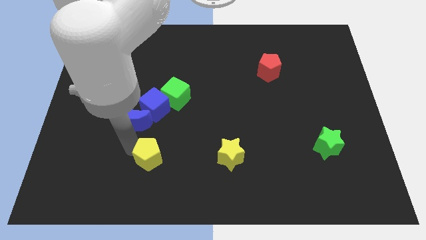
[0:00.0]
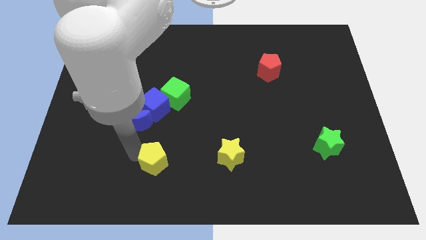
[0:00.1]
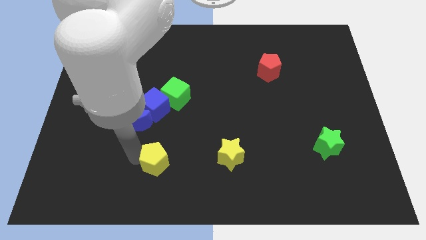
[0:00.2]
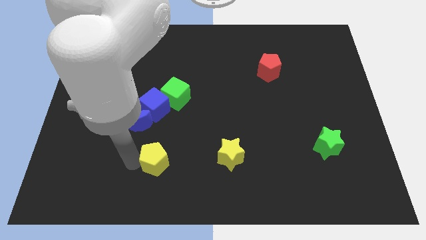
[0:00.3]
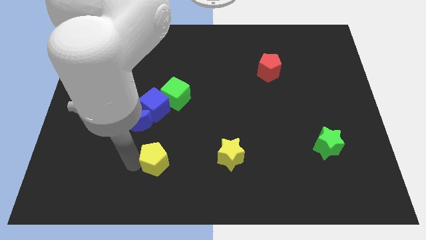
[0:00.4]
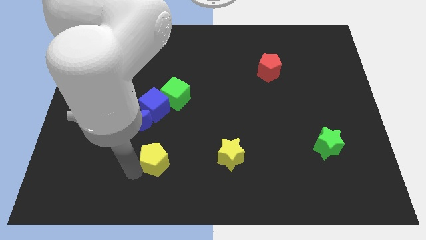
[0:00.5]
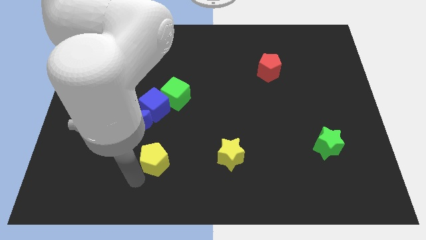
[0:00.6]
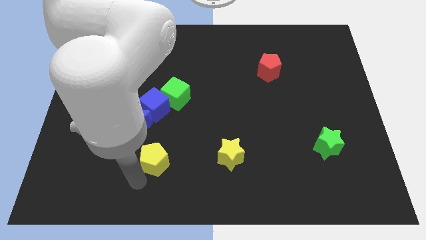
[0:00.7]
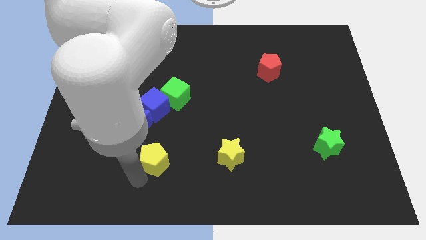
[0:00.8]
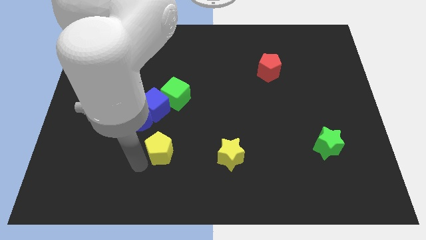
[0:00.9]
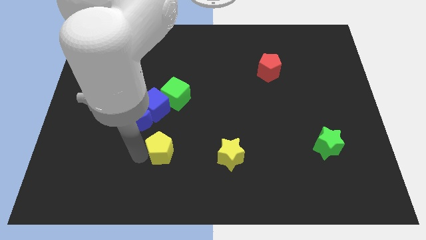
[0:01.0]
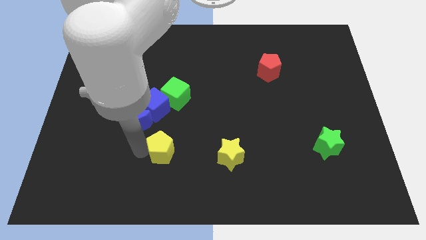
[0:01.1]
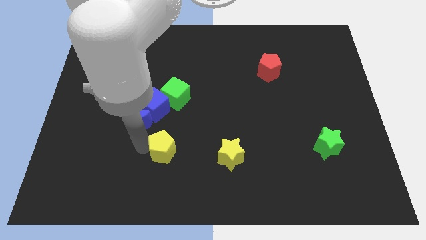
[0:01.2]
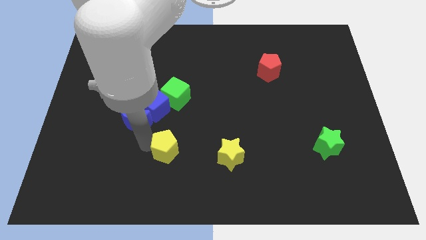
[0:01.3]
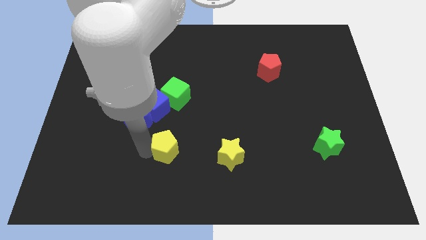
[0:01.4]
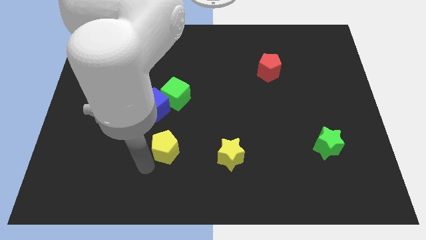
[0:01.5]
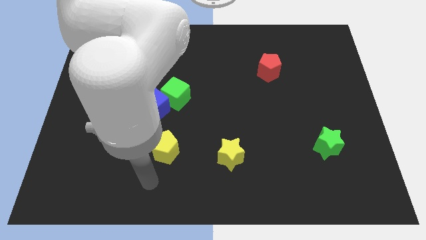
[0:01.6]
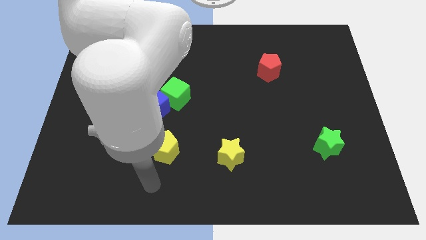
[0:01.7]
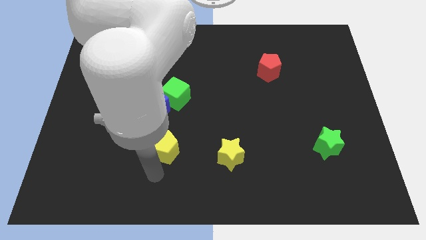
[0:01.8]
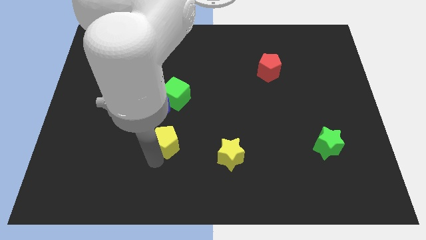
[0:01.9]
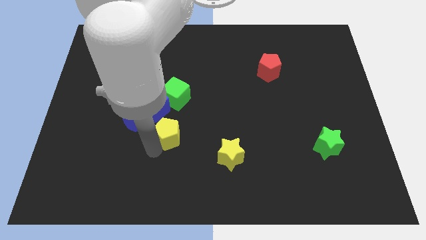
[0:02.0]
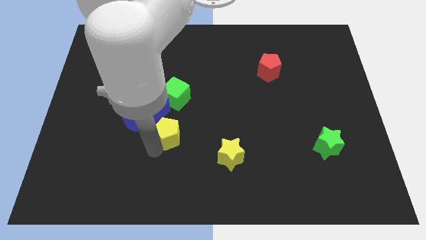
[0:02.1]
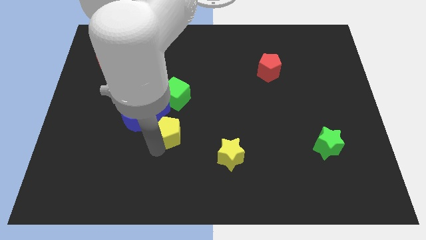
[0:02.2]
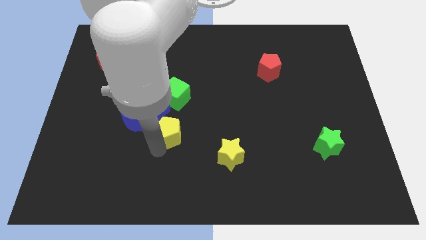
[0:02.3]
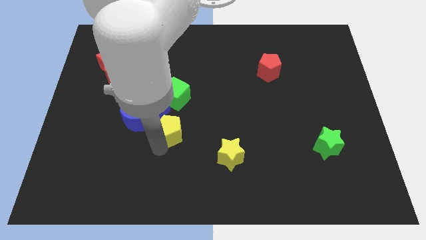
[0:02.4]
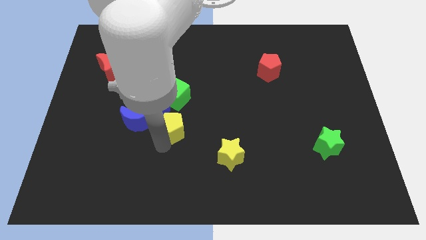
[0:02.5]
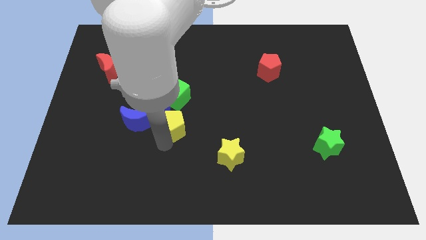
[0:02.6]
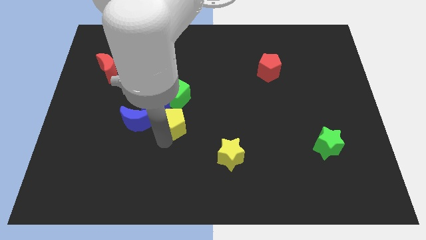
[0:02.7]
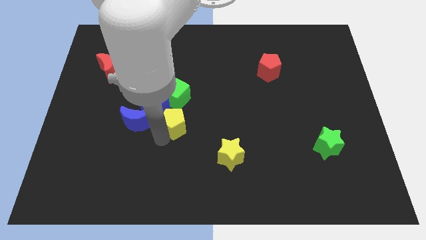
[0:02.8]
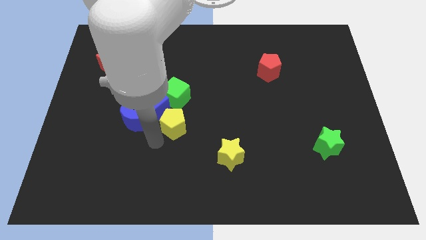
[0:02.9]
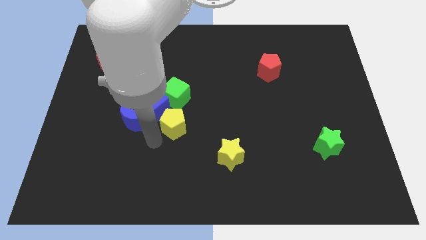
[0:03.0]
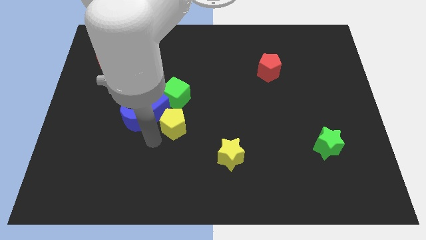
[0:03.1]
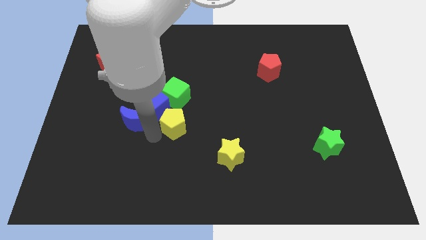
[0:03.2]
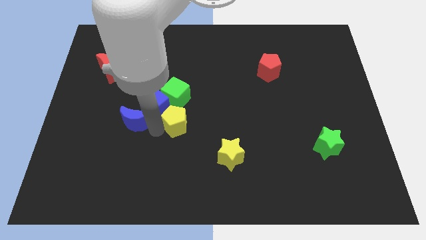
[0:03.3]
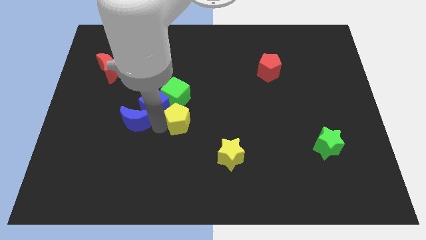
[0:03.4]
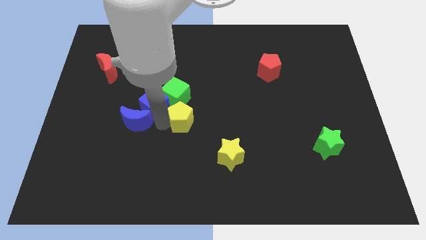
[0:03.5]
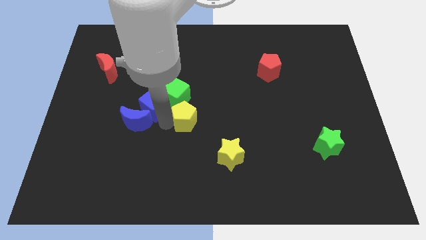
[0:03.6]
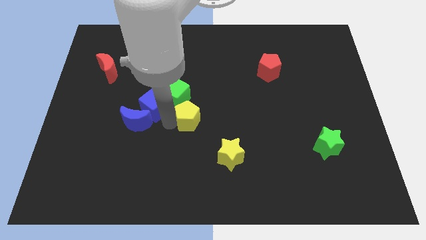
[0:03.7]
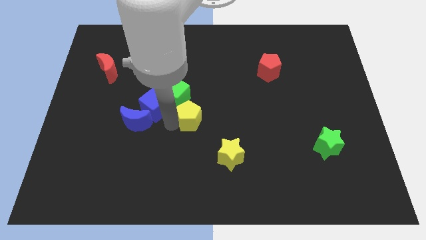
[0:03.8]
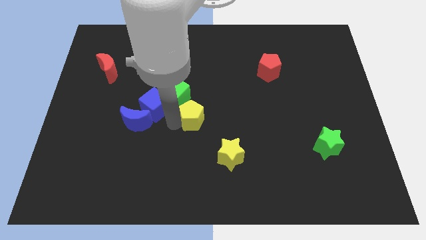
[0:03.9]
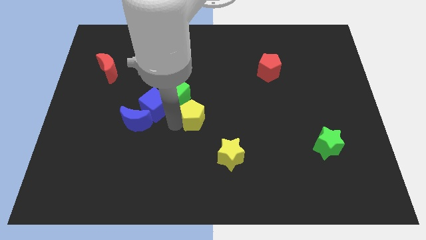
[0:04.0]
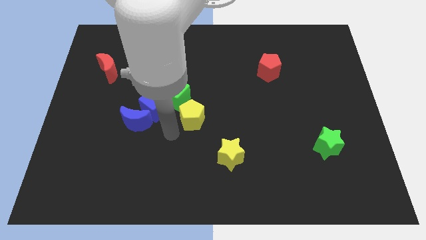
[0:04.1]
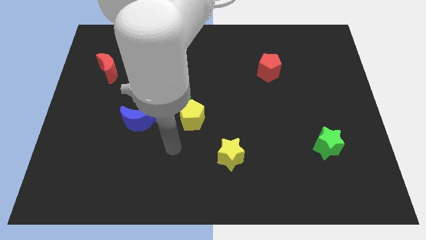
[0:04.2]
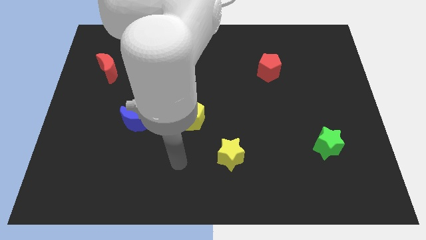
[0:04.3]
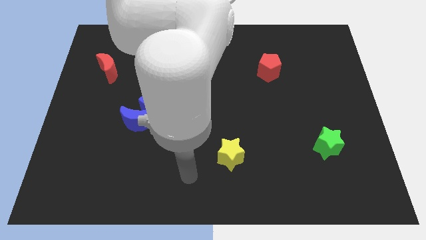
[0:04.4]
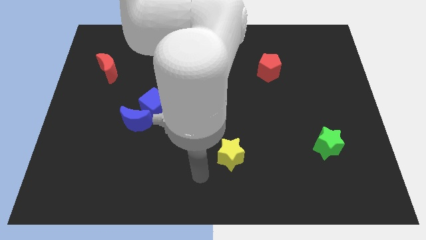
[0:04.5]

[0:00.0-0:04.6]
move the pentagon towards the center of the board

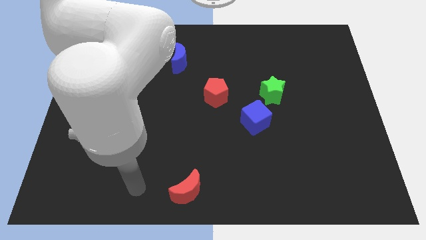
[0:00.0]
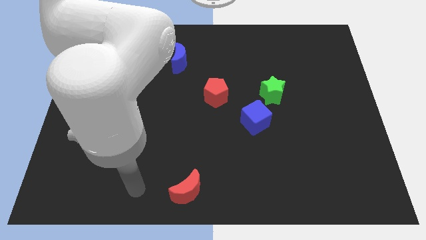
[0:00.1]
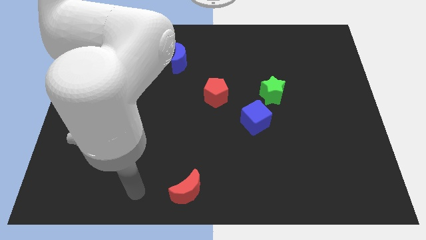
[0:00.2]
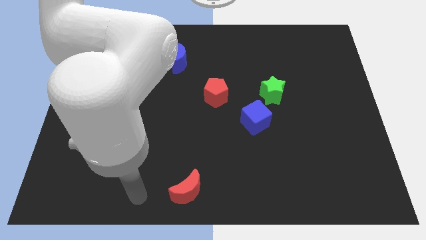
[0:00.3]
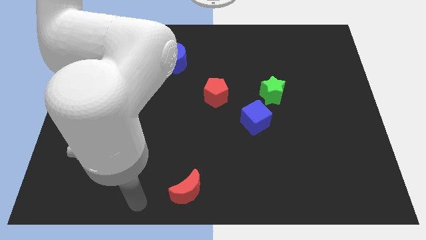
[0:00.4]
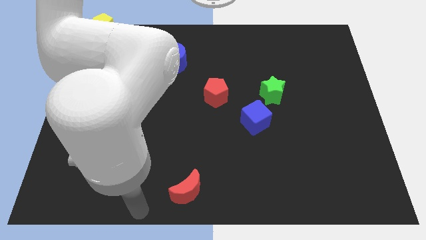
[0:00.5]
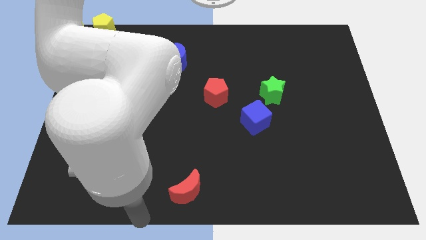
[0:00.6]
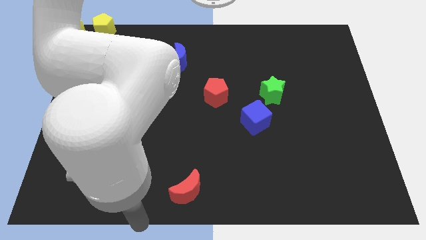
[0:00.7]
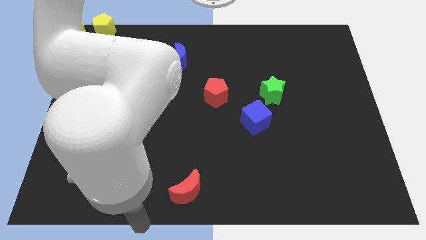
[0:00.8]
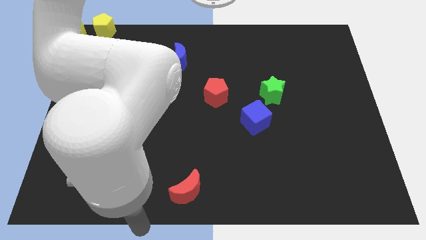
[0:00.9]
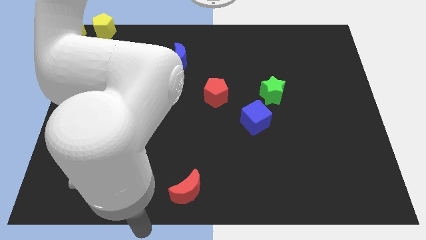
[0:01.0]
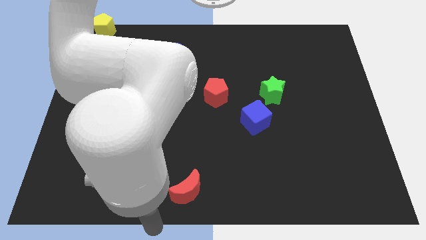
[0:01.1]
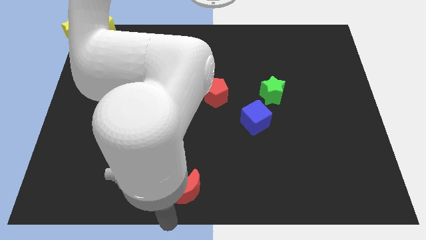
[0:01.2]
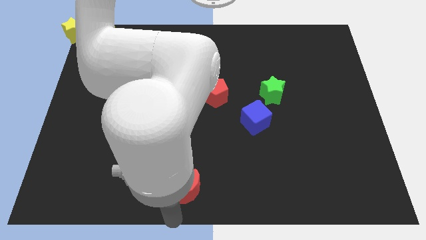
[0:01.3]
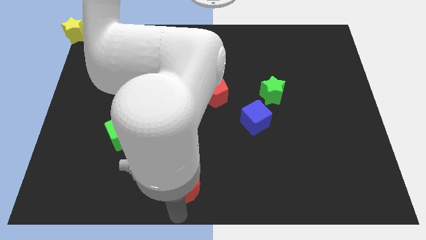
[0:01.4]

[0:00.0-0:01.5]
point your arm at the bottom of red moon

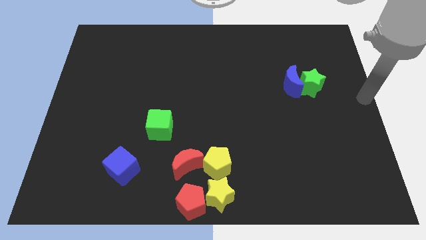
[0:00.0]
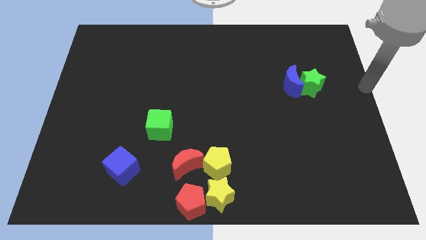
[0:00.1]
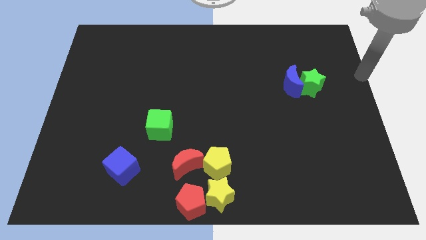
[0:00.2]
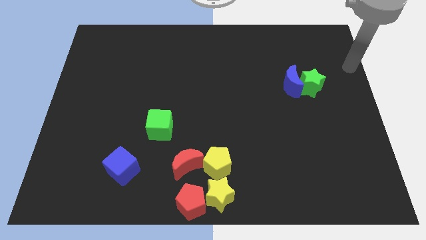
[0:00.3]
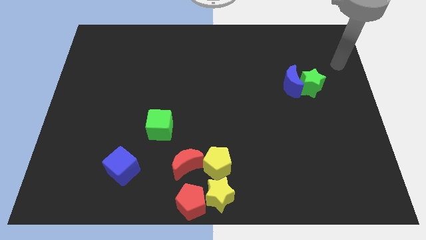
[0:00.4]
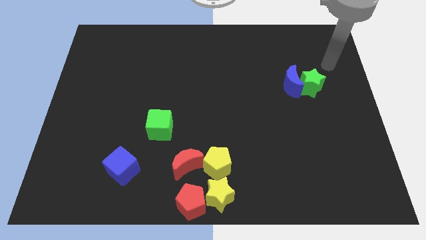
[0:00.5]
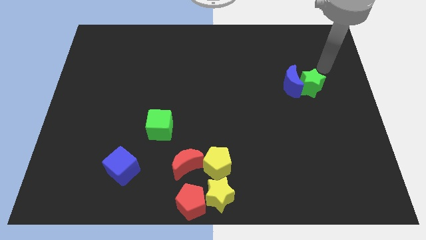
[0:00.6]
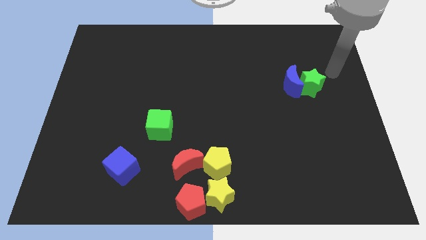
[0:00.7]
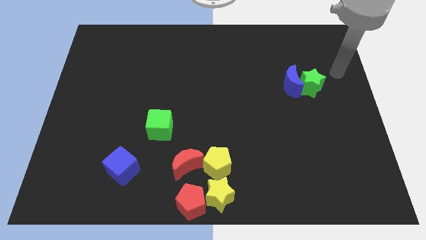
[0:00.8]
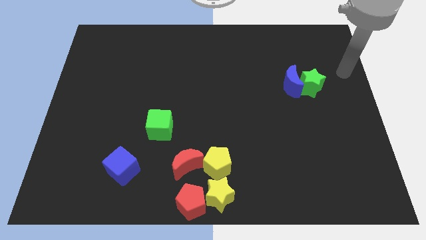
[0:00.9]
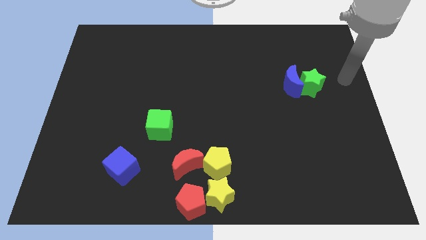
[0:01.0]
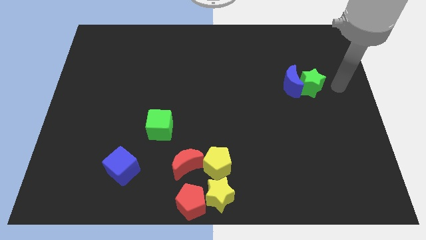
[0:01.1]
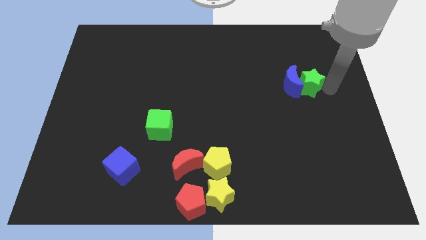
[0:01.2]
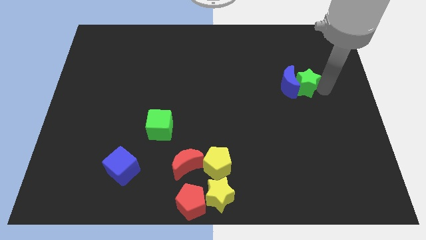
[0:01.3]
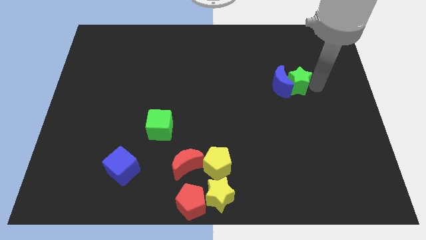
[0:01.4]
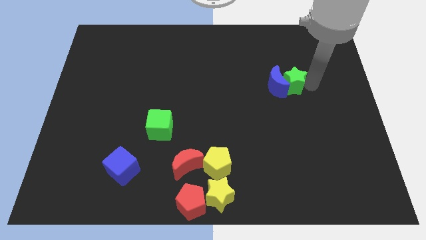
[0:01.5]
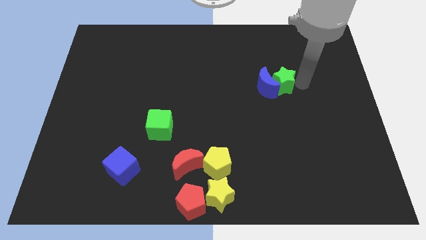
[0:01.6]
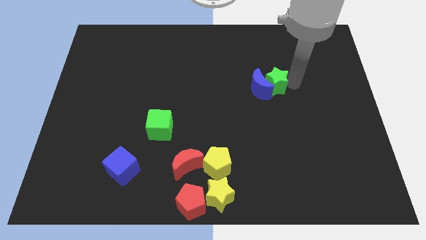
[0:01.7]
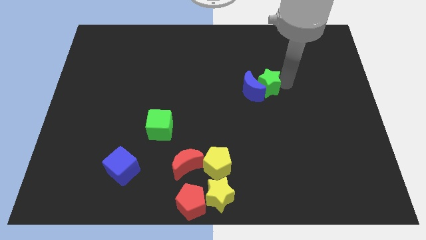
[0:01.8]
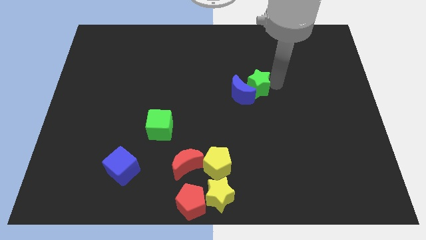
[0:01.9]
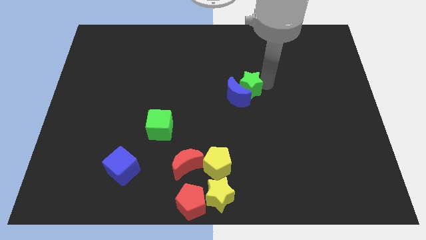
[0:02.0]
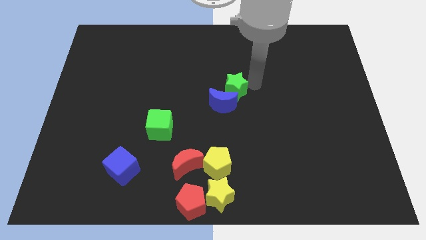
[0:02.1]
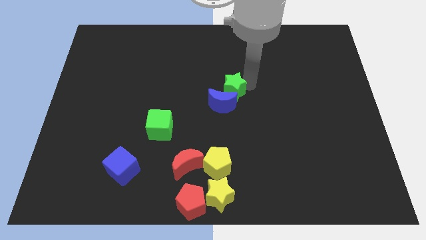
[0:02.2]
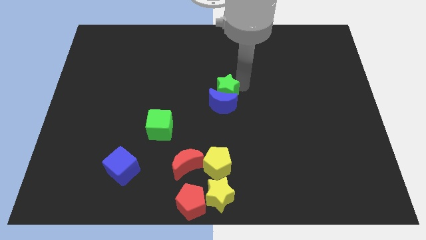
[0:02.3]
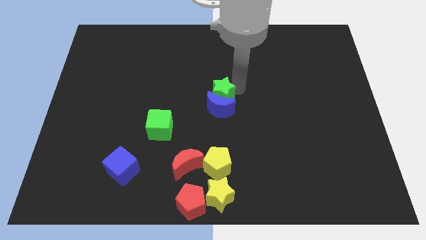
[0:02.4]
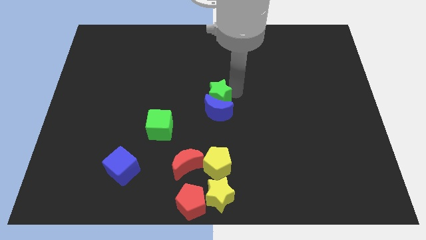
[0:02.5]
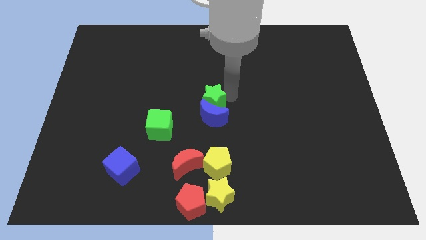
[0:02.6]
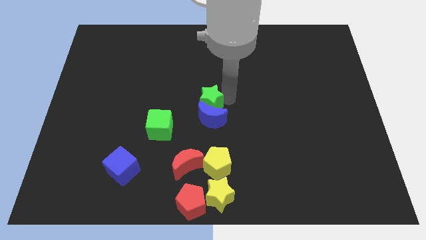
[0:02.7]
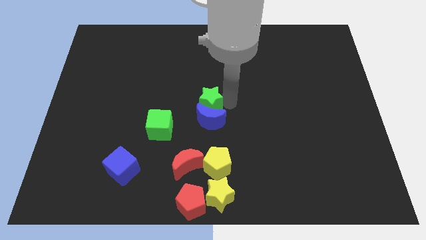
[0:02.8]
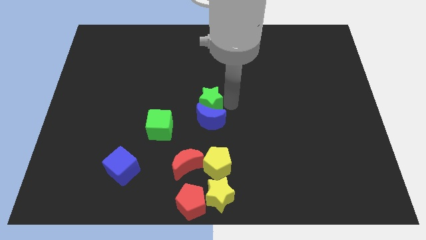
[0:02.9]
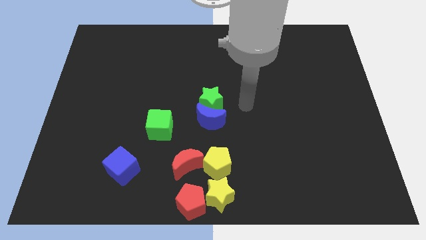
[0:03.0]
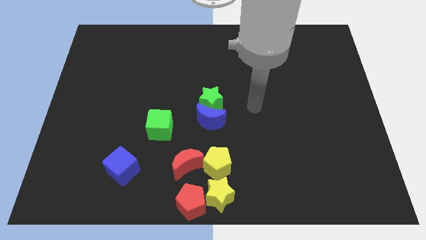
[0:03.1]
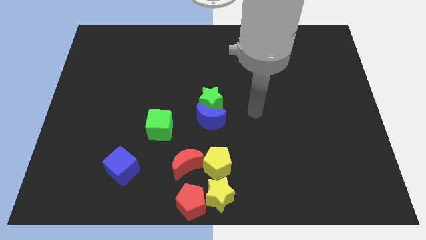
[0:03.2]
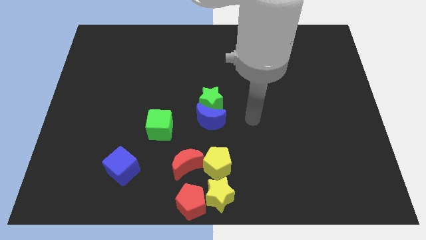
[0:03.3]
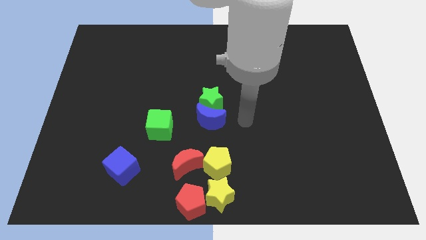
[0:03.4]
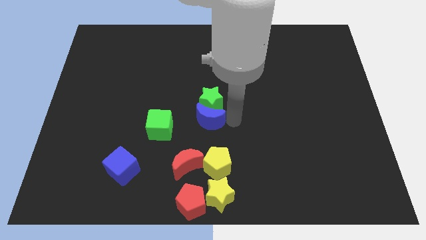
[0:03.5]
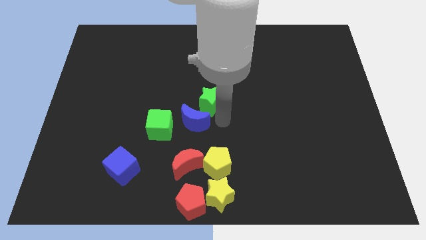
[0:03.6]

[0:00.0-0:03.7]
place green star to the center of the board
